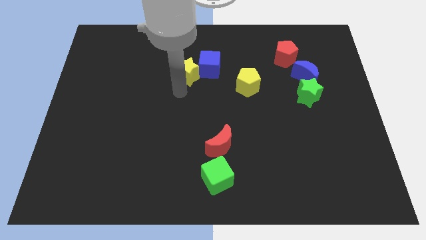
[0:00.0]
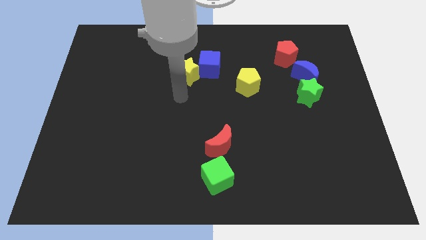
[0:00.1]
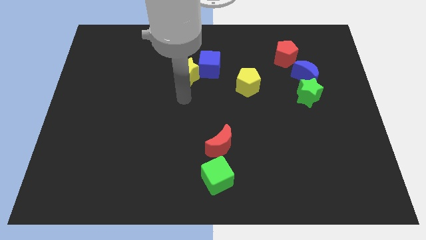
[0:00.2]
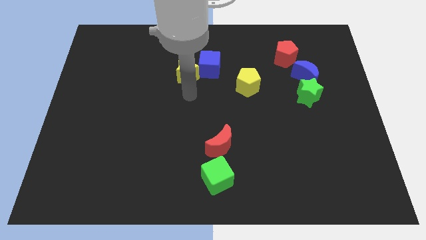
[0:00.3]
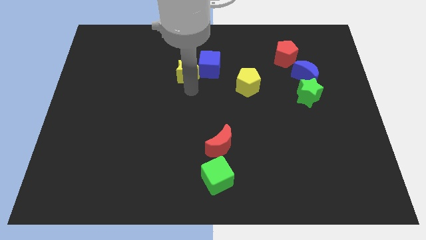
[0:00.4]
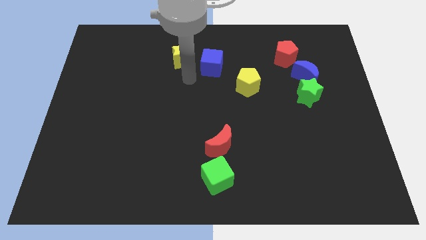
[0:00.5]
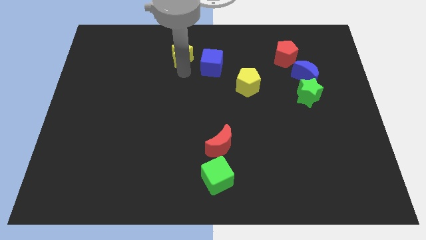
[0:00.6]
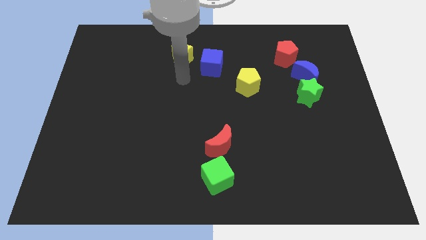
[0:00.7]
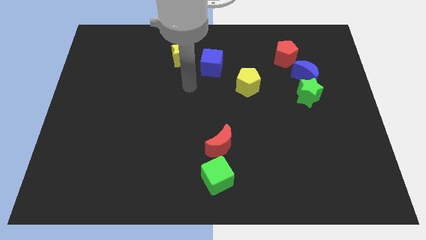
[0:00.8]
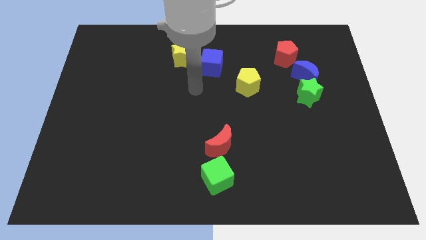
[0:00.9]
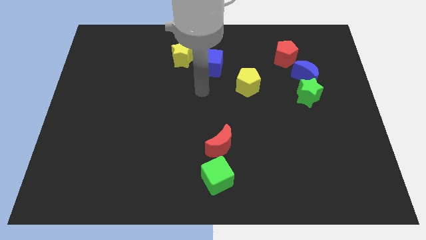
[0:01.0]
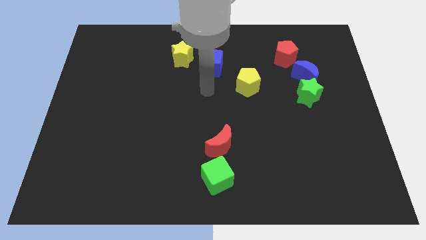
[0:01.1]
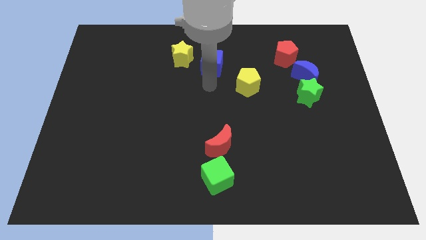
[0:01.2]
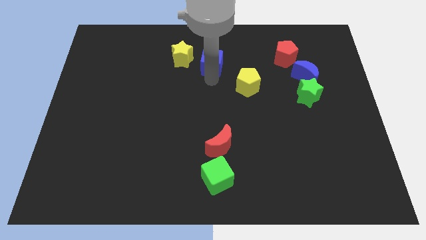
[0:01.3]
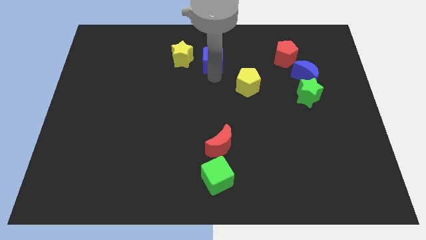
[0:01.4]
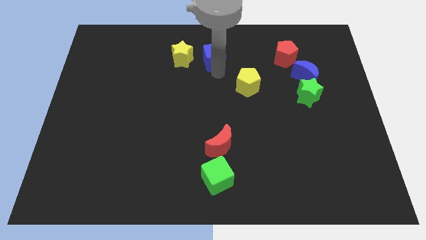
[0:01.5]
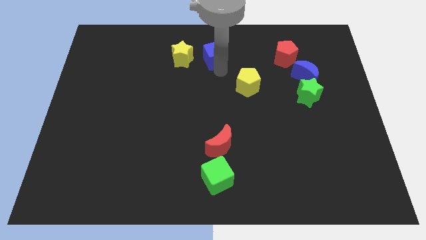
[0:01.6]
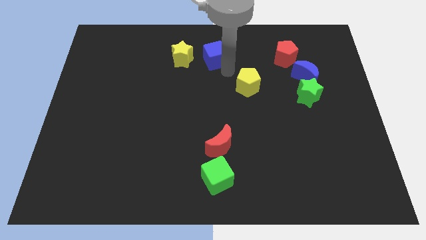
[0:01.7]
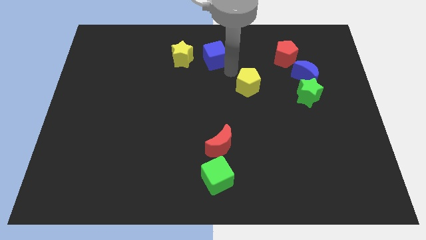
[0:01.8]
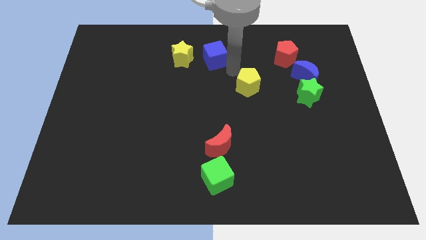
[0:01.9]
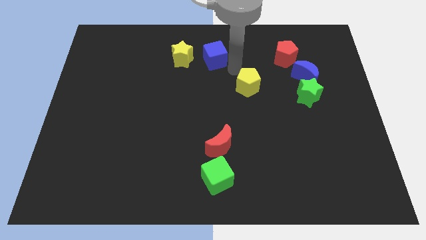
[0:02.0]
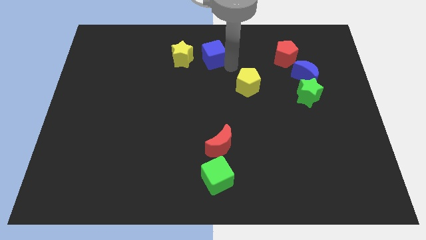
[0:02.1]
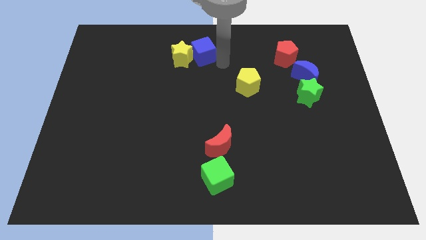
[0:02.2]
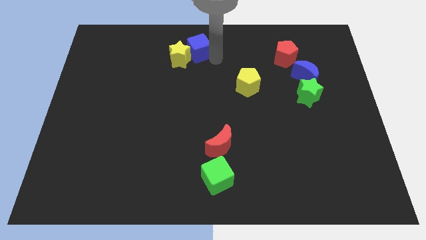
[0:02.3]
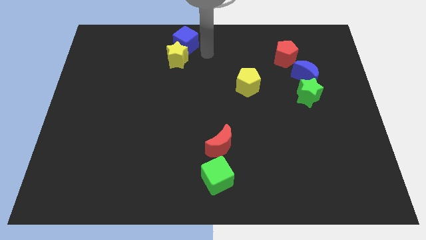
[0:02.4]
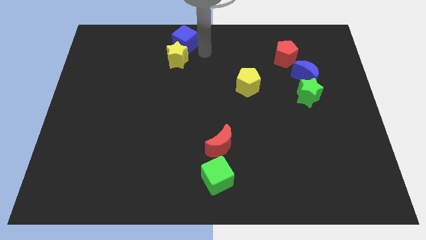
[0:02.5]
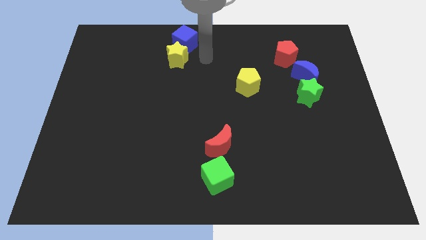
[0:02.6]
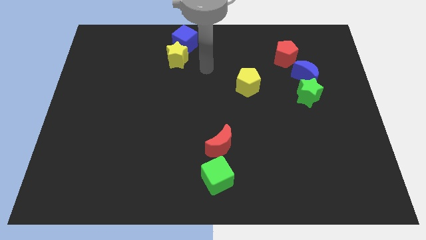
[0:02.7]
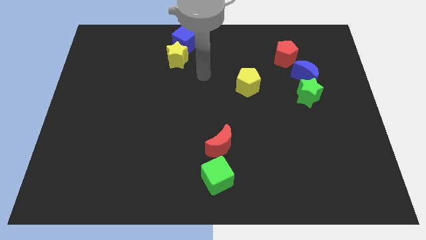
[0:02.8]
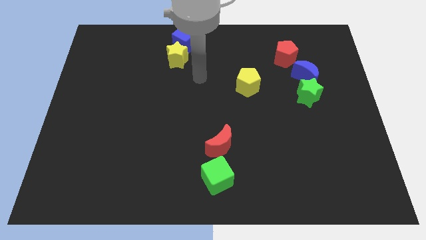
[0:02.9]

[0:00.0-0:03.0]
move the blue cube to the top side of the yellow star

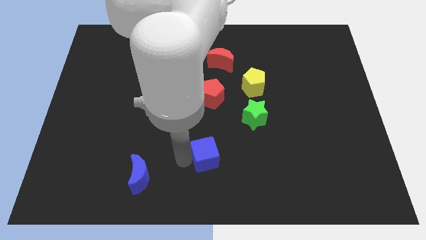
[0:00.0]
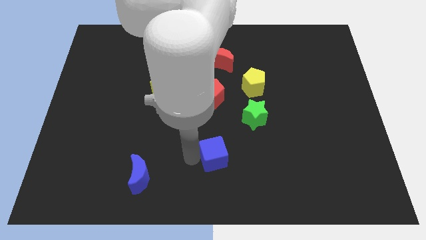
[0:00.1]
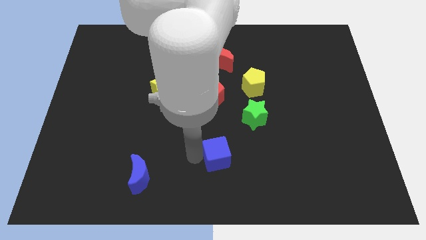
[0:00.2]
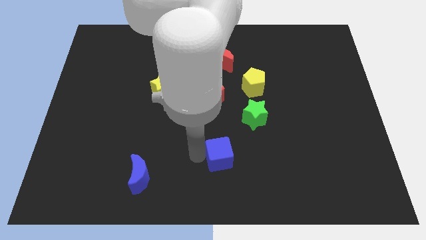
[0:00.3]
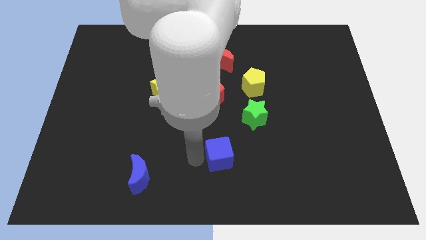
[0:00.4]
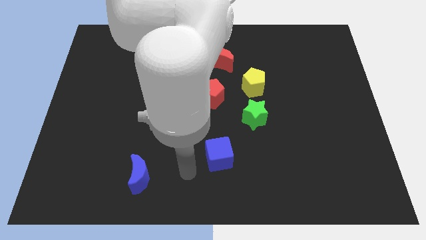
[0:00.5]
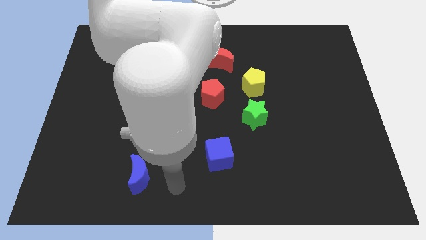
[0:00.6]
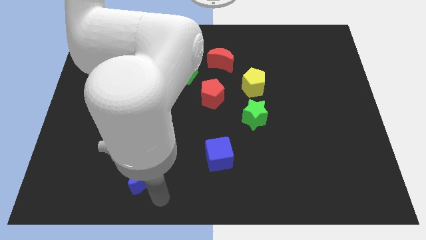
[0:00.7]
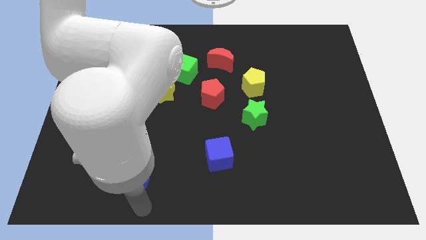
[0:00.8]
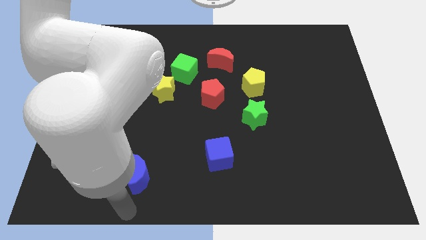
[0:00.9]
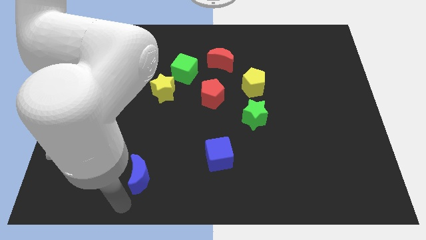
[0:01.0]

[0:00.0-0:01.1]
adjust the blue cube vertically bottom to the red pentagon

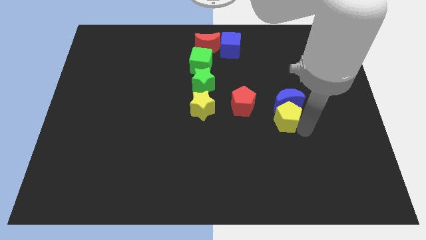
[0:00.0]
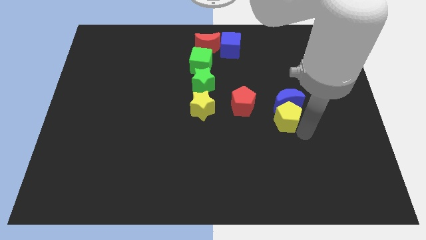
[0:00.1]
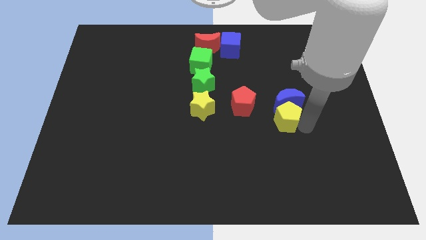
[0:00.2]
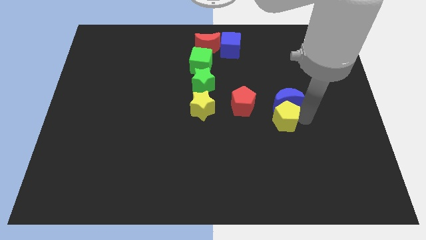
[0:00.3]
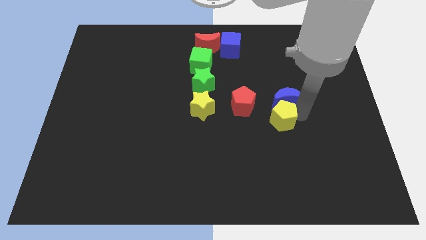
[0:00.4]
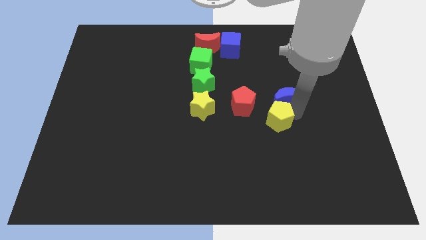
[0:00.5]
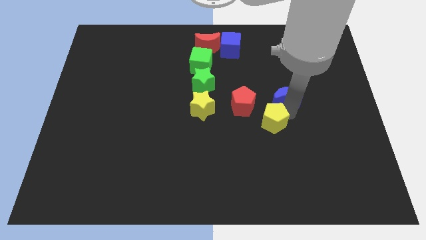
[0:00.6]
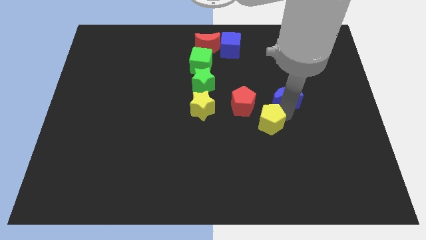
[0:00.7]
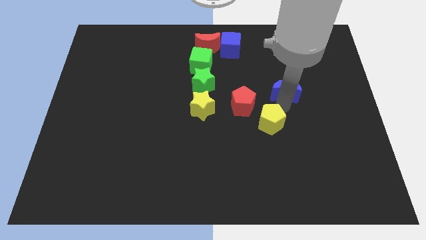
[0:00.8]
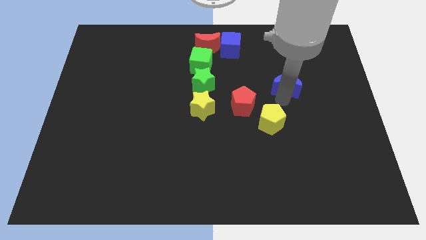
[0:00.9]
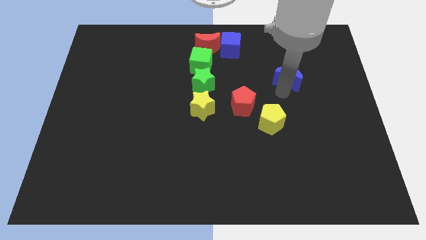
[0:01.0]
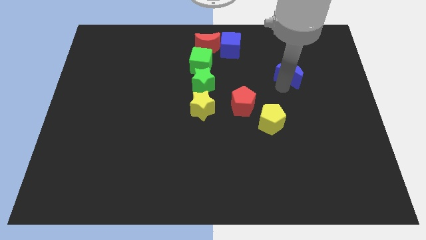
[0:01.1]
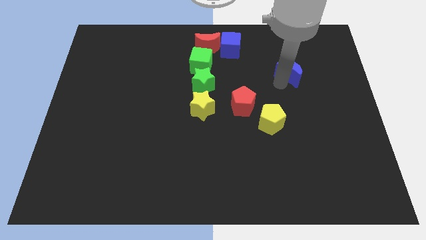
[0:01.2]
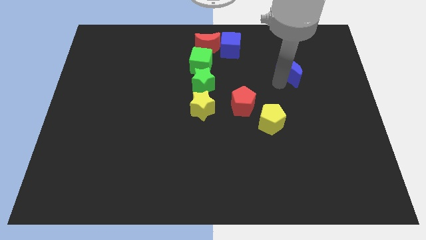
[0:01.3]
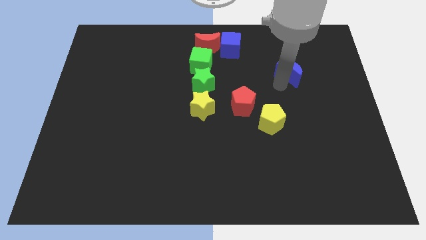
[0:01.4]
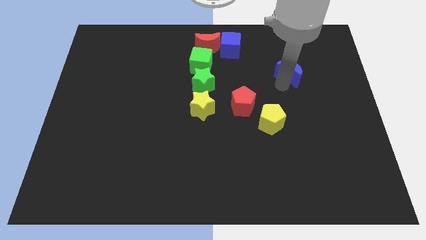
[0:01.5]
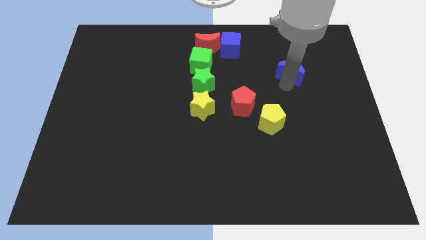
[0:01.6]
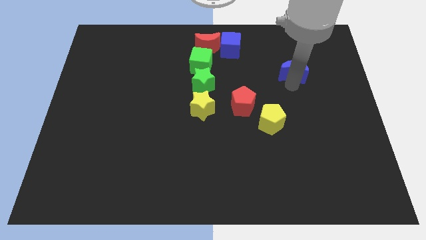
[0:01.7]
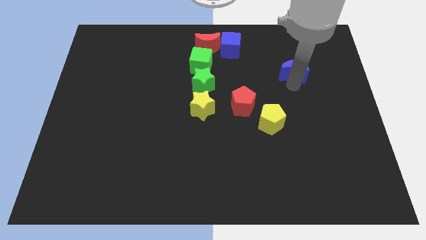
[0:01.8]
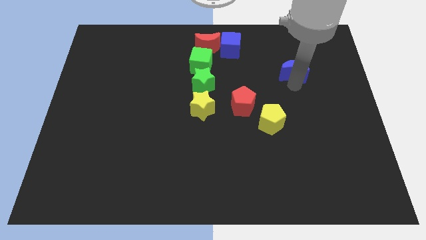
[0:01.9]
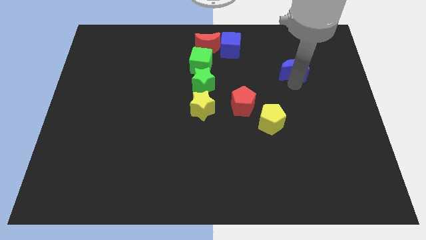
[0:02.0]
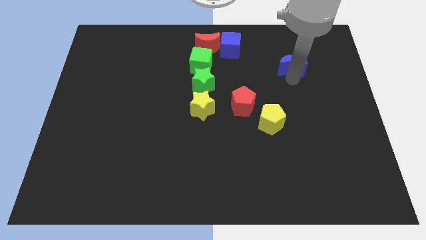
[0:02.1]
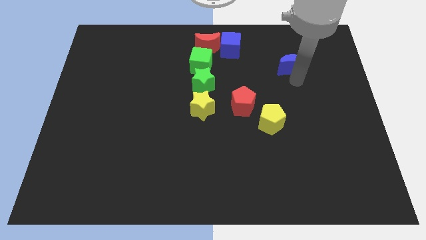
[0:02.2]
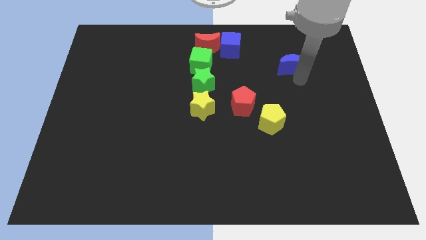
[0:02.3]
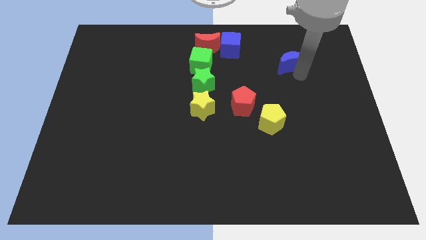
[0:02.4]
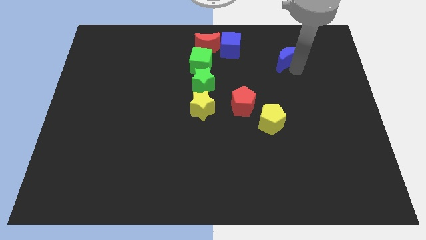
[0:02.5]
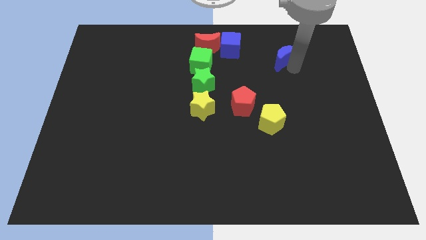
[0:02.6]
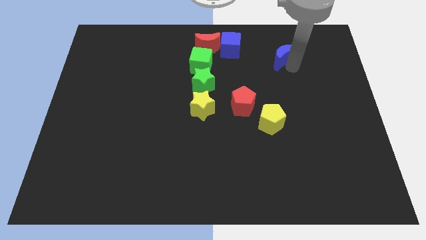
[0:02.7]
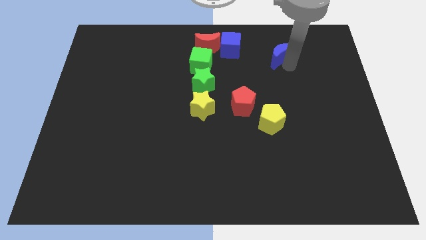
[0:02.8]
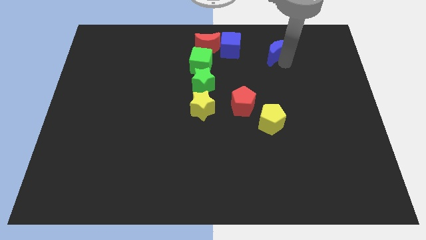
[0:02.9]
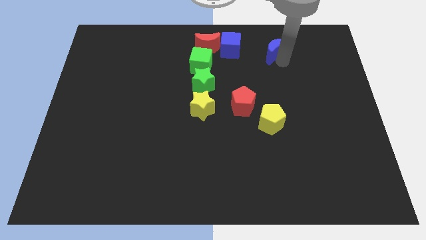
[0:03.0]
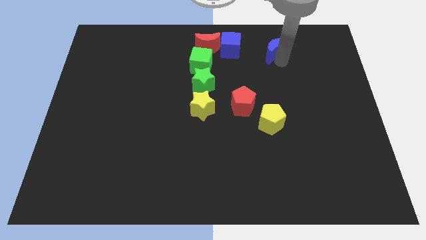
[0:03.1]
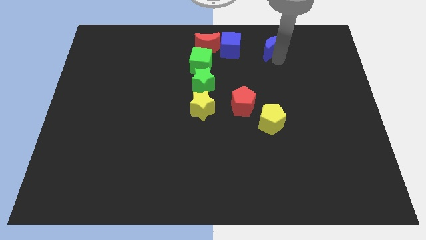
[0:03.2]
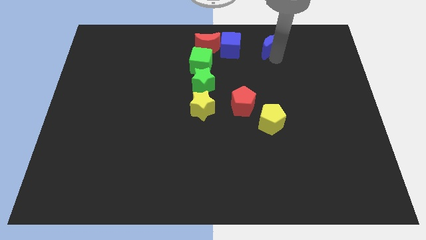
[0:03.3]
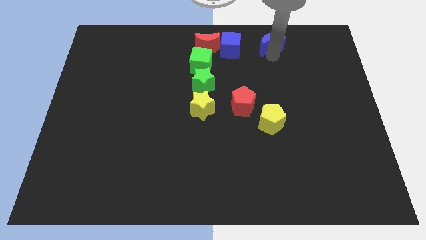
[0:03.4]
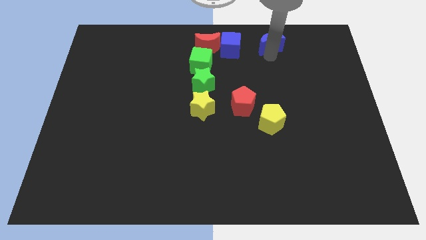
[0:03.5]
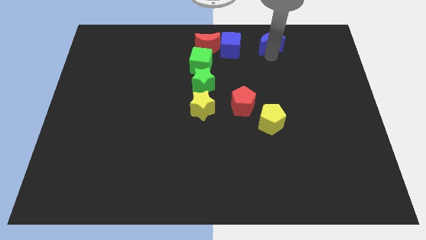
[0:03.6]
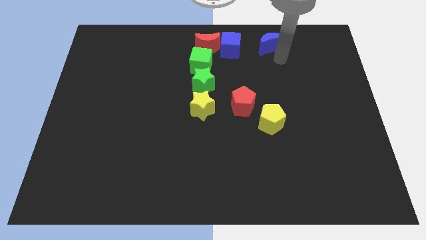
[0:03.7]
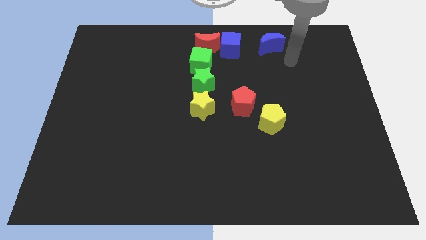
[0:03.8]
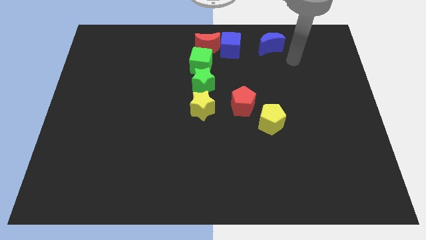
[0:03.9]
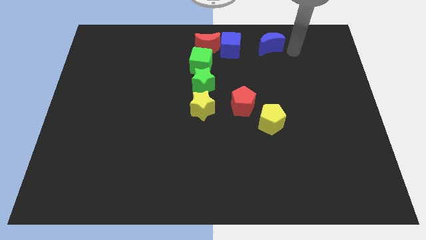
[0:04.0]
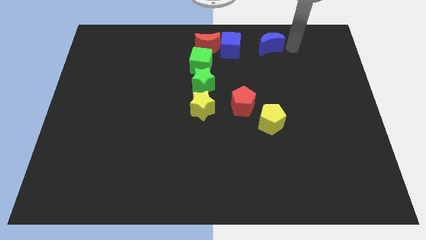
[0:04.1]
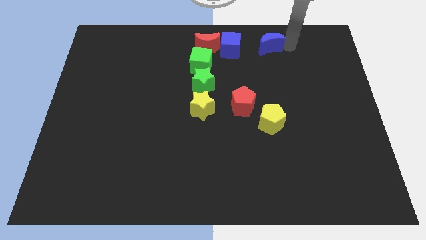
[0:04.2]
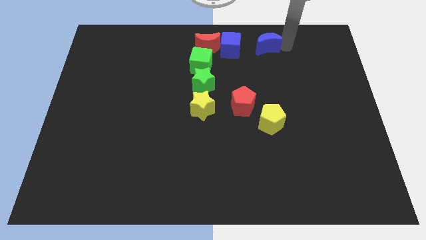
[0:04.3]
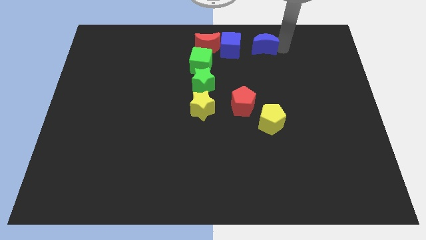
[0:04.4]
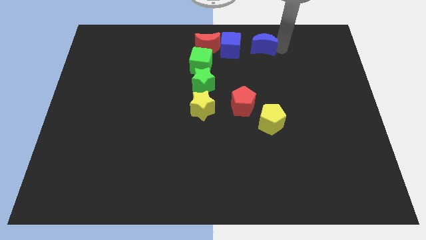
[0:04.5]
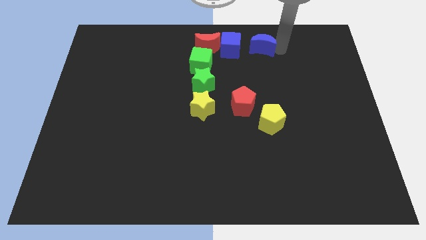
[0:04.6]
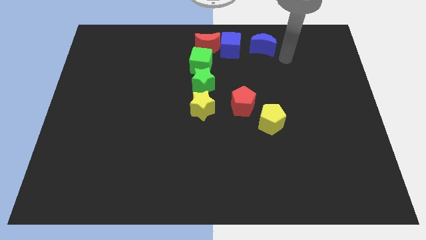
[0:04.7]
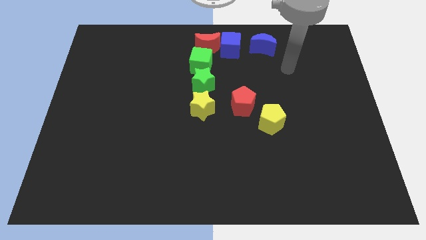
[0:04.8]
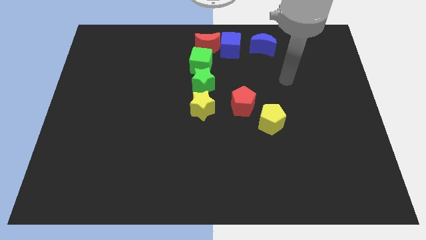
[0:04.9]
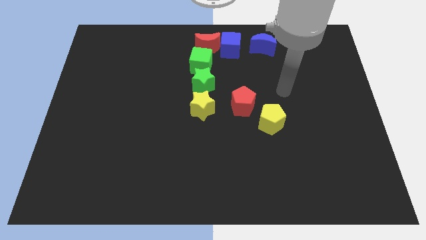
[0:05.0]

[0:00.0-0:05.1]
slide blue moon to the right of blue cube
